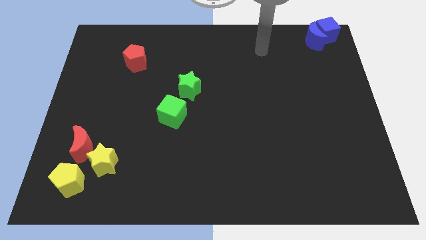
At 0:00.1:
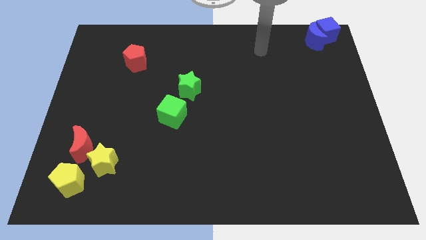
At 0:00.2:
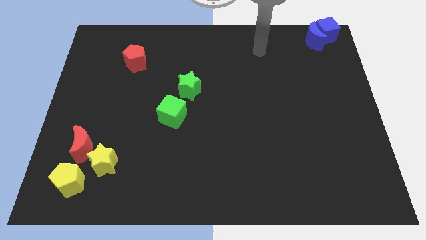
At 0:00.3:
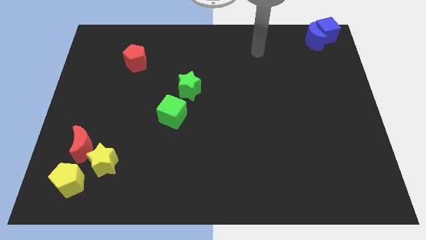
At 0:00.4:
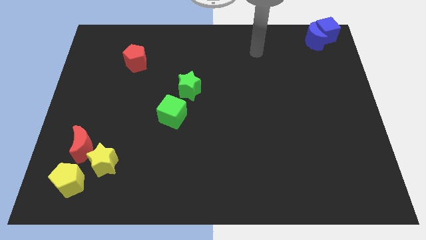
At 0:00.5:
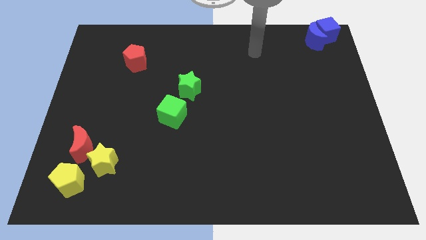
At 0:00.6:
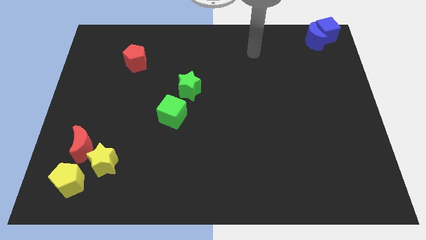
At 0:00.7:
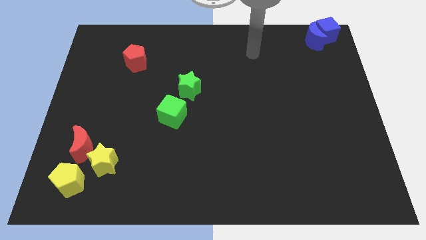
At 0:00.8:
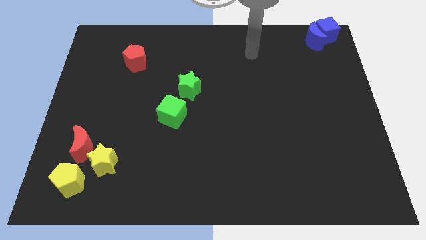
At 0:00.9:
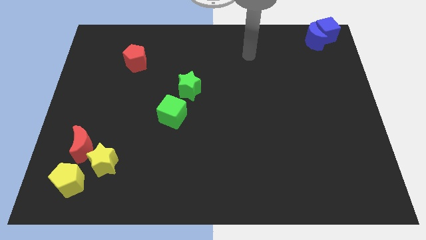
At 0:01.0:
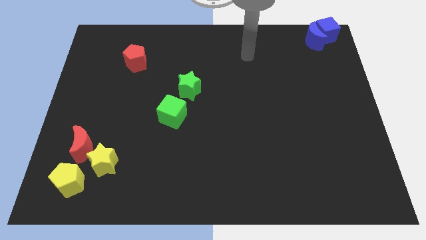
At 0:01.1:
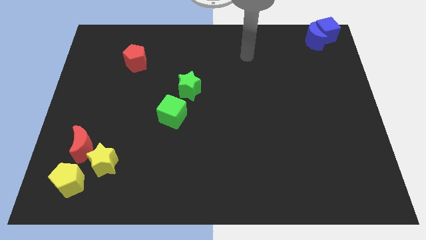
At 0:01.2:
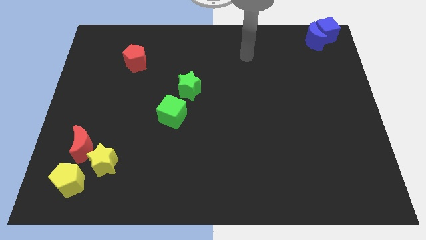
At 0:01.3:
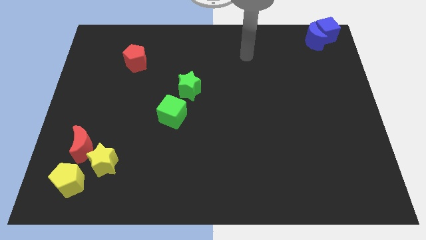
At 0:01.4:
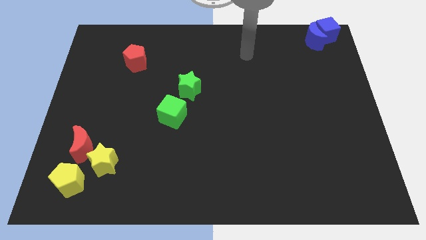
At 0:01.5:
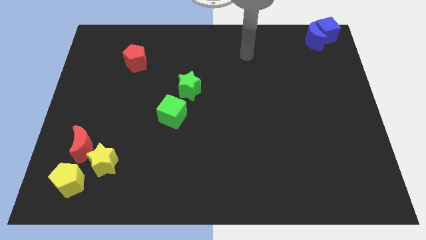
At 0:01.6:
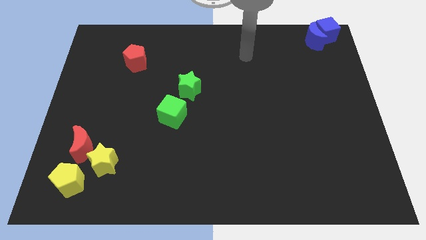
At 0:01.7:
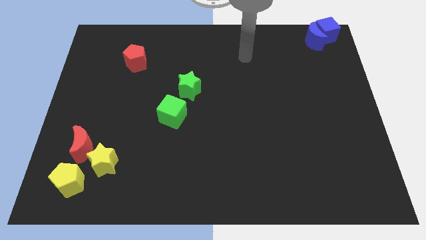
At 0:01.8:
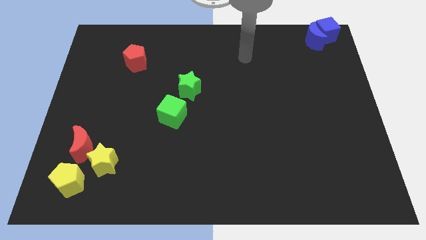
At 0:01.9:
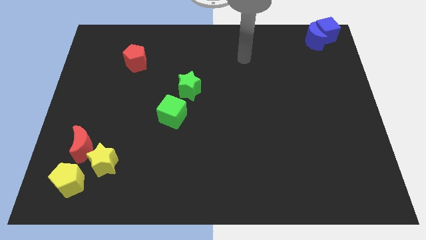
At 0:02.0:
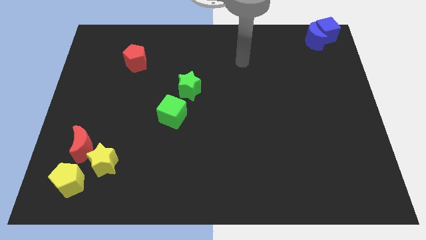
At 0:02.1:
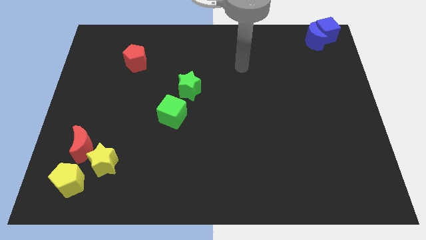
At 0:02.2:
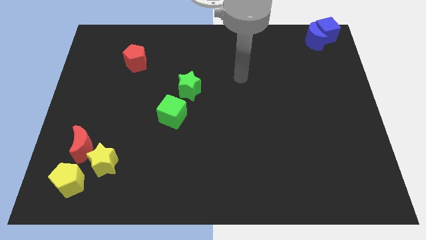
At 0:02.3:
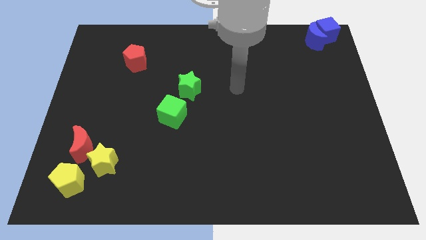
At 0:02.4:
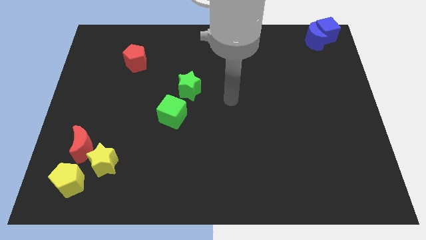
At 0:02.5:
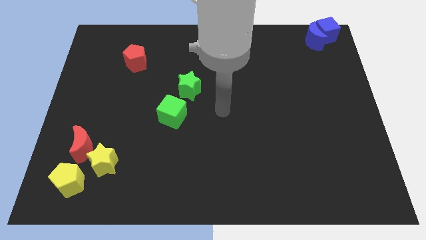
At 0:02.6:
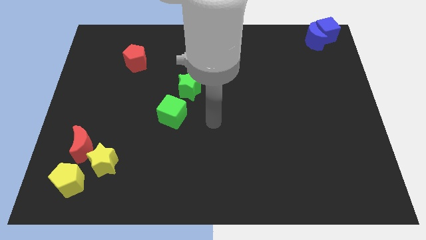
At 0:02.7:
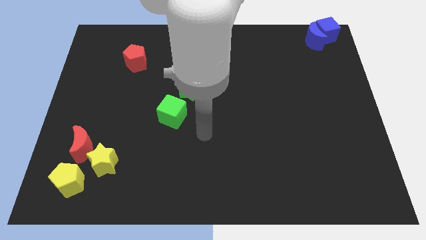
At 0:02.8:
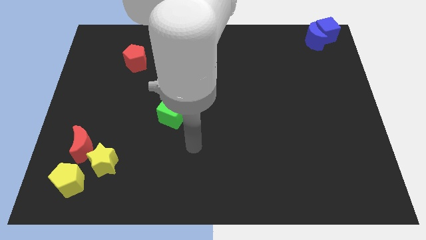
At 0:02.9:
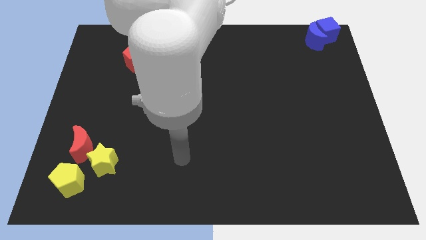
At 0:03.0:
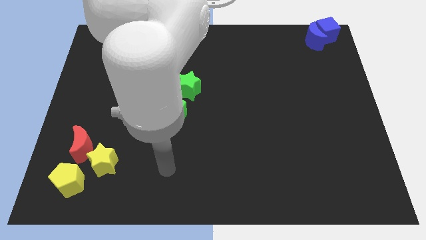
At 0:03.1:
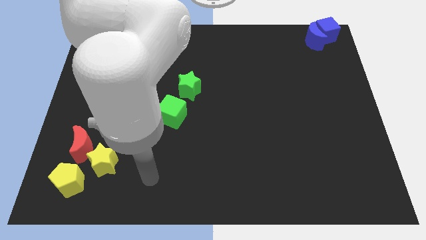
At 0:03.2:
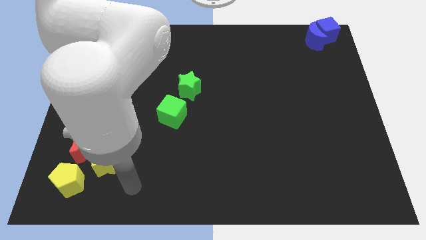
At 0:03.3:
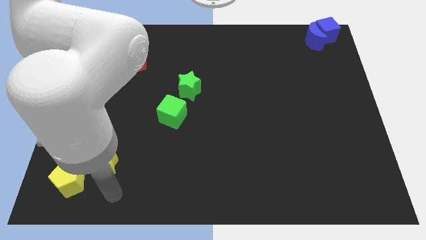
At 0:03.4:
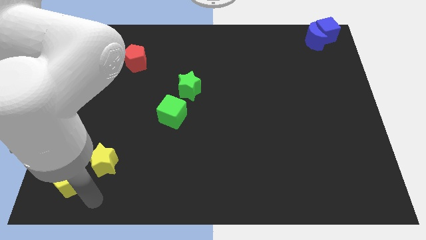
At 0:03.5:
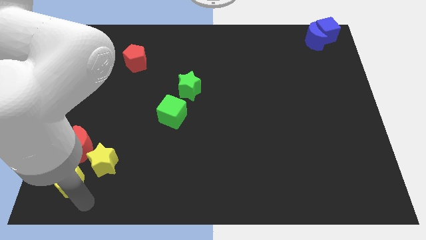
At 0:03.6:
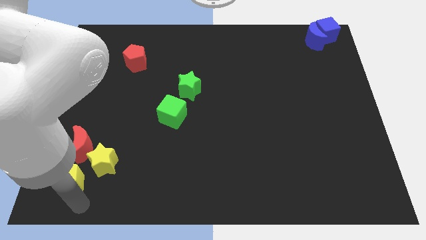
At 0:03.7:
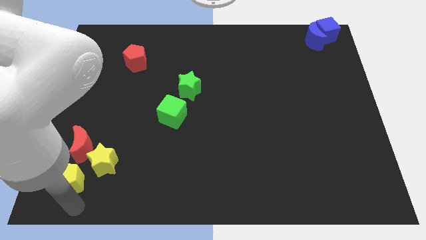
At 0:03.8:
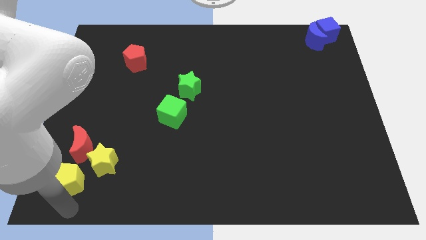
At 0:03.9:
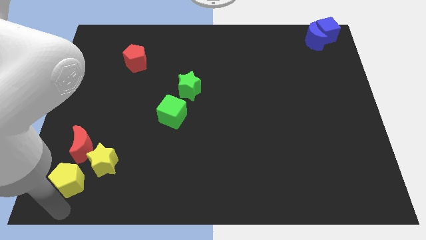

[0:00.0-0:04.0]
move your arm to the bottom of yellow pentagon

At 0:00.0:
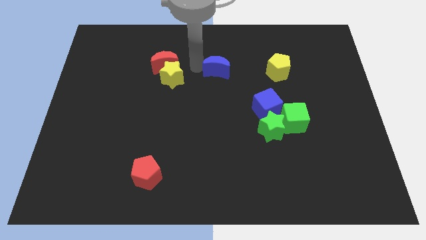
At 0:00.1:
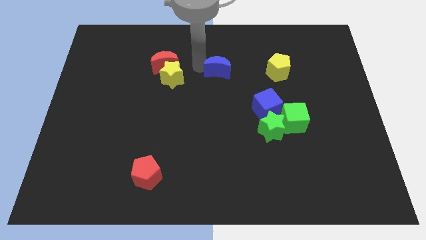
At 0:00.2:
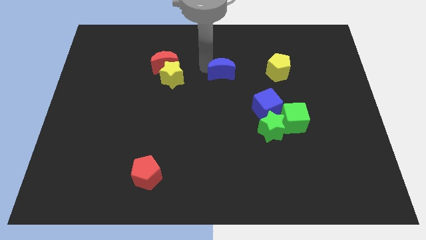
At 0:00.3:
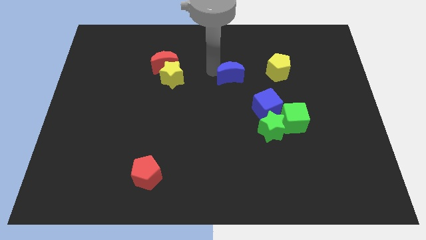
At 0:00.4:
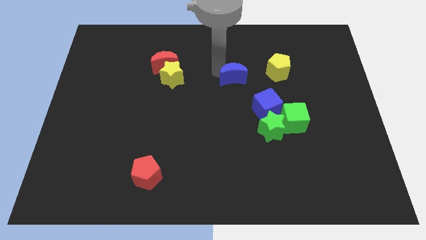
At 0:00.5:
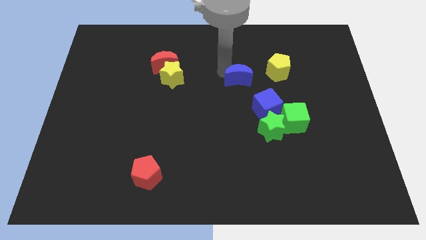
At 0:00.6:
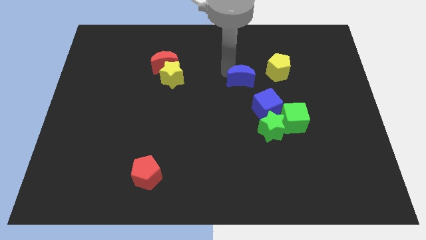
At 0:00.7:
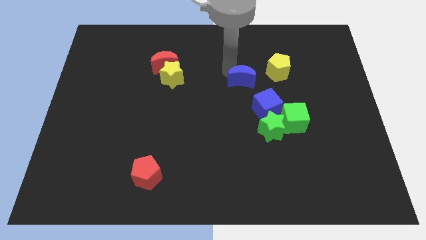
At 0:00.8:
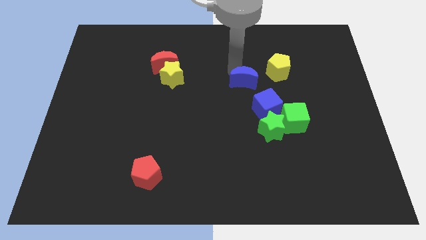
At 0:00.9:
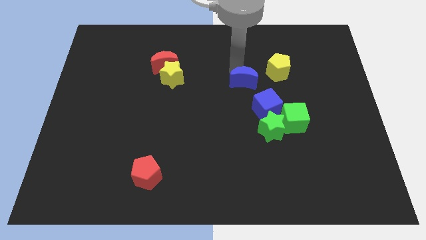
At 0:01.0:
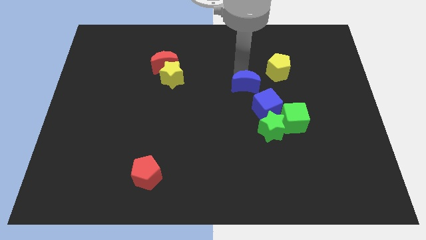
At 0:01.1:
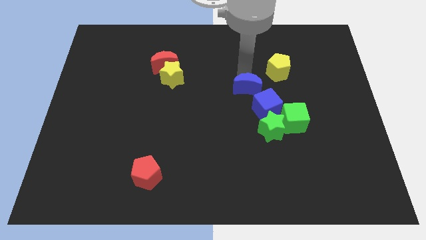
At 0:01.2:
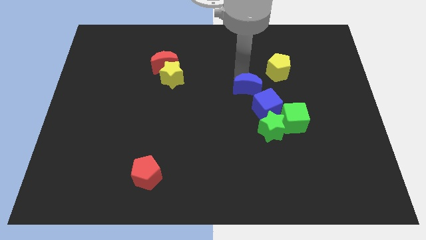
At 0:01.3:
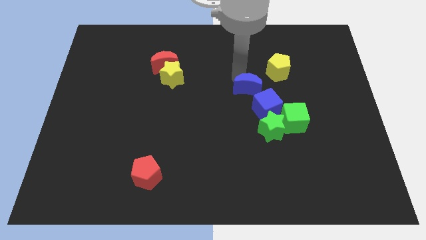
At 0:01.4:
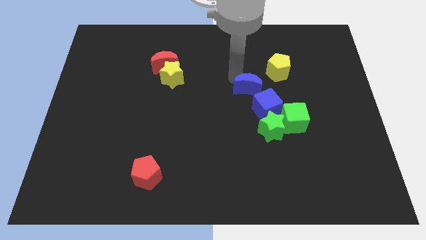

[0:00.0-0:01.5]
move the blue moon towards the blue cube

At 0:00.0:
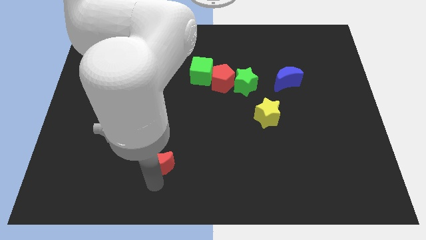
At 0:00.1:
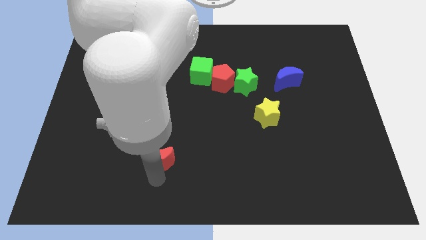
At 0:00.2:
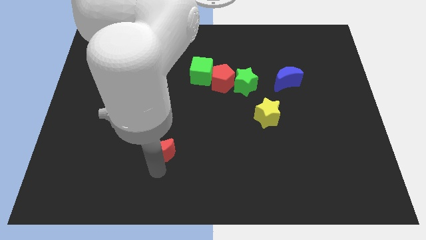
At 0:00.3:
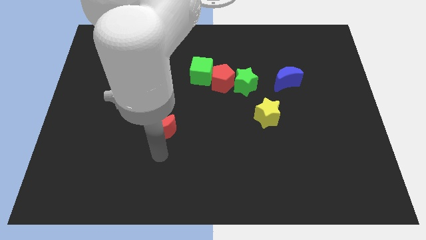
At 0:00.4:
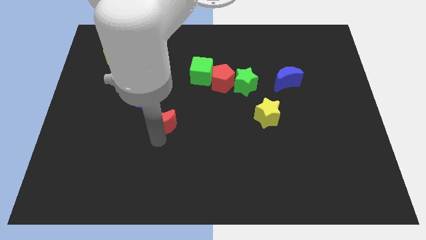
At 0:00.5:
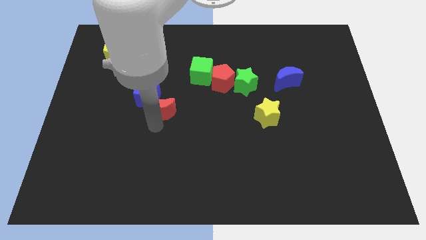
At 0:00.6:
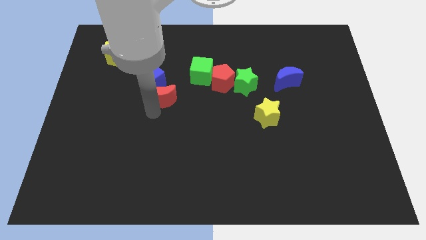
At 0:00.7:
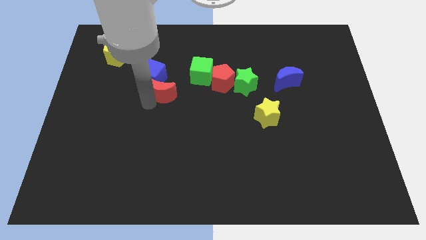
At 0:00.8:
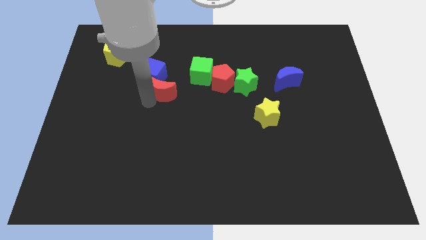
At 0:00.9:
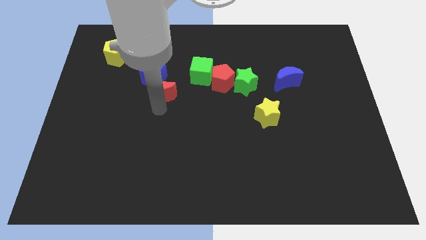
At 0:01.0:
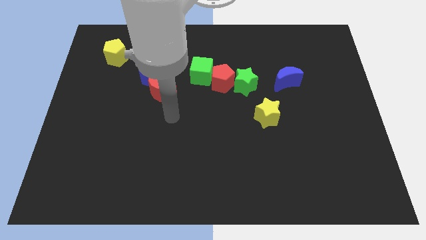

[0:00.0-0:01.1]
push the blue cube with the red crescent slightly towards the top center of the board

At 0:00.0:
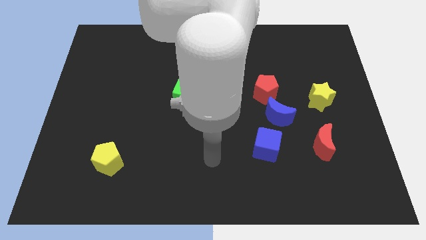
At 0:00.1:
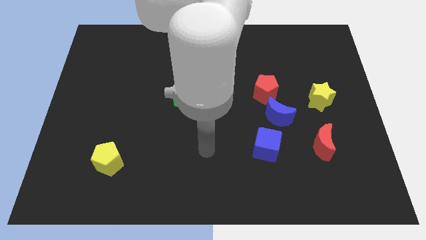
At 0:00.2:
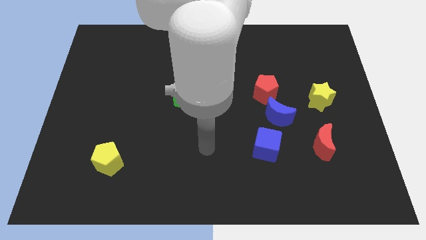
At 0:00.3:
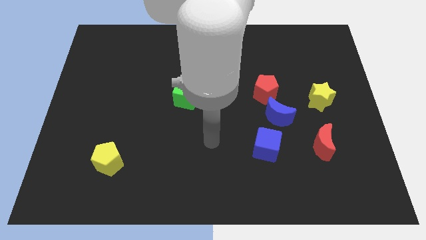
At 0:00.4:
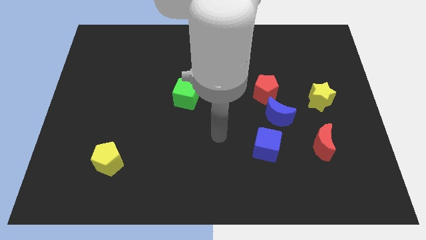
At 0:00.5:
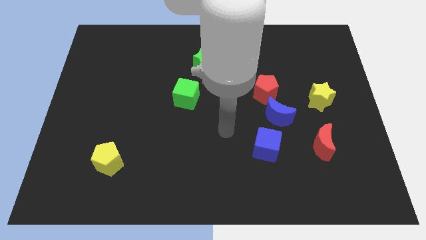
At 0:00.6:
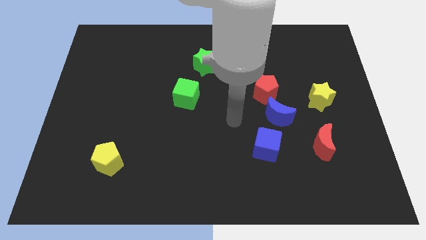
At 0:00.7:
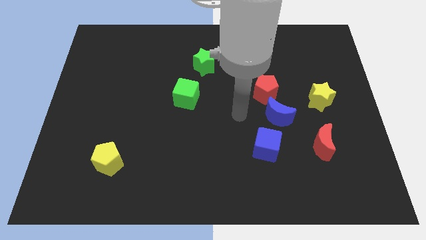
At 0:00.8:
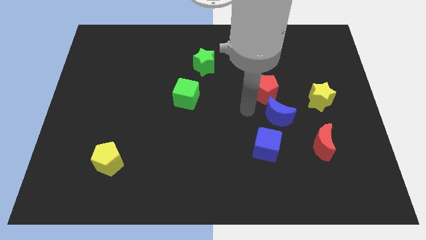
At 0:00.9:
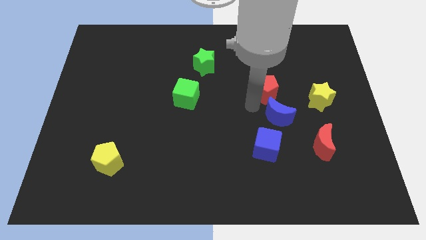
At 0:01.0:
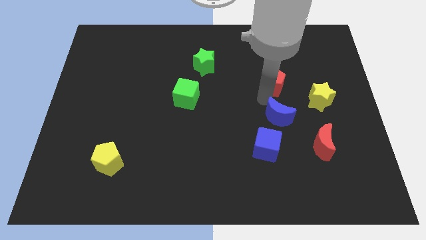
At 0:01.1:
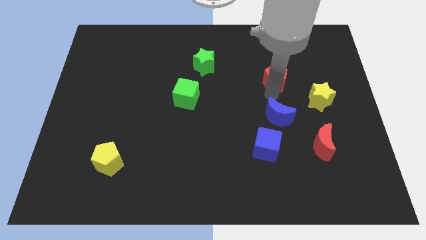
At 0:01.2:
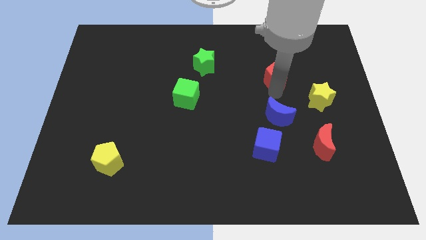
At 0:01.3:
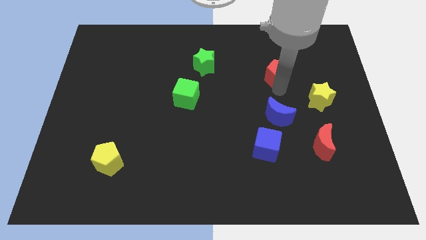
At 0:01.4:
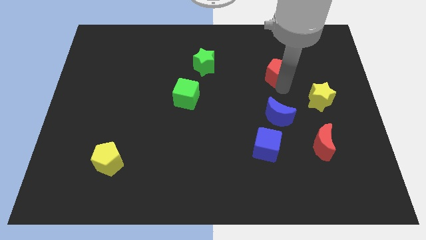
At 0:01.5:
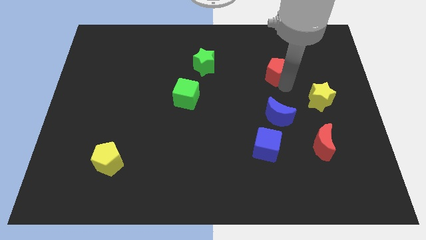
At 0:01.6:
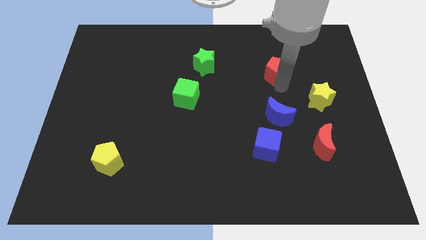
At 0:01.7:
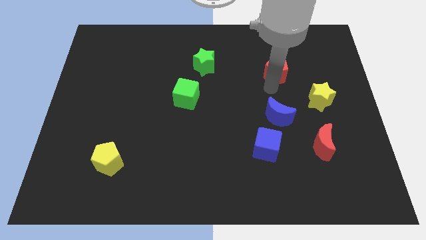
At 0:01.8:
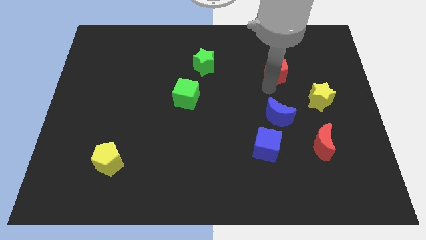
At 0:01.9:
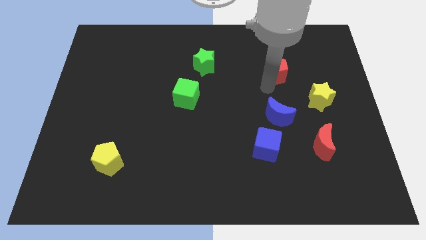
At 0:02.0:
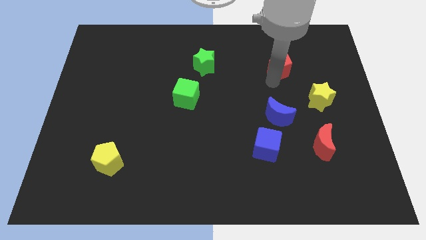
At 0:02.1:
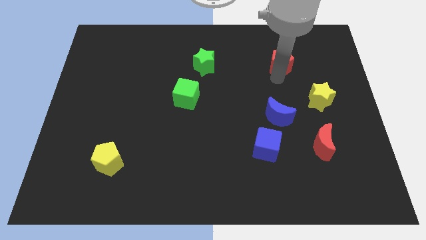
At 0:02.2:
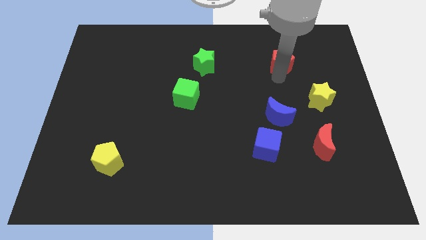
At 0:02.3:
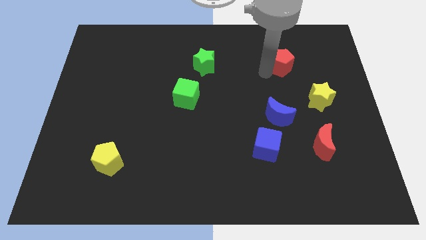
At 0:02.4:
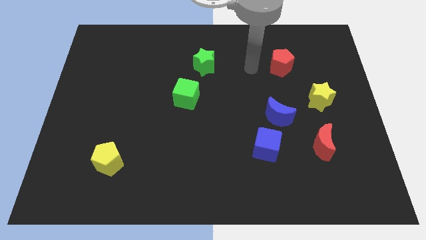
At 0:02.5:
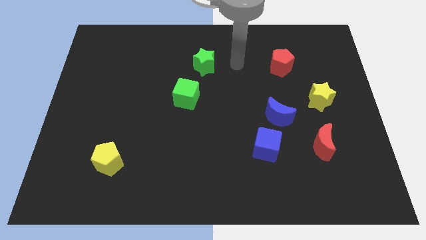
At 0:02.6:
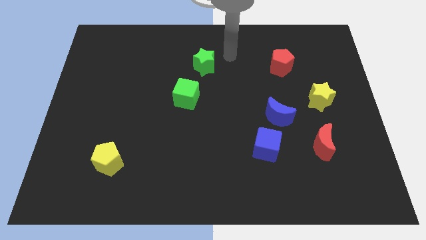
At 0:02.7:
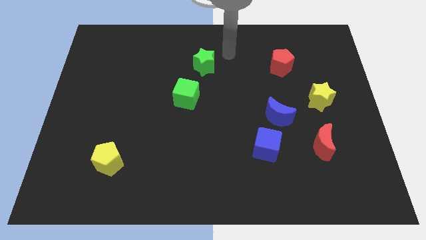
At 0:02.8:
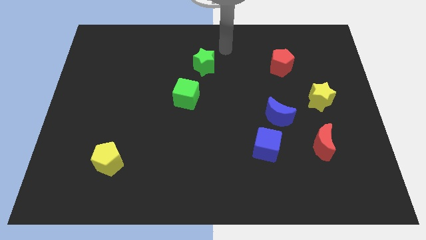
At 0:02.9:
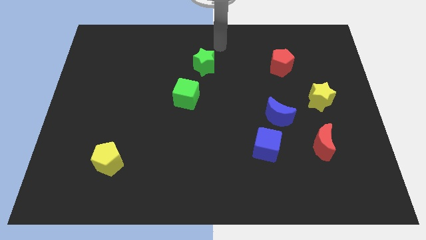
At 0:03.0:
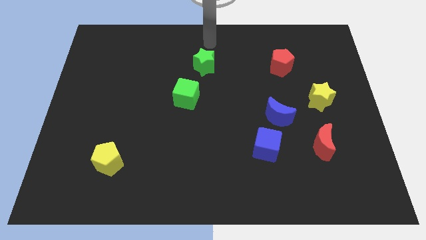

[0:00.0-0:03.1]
place the red pentagon to the right of the green star
